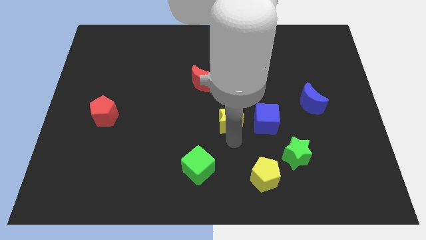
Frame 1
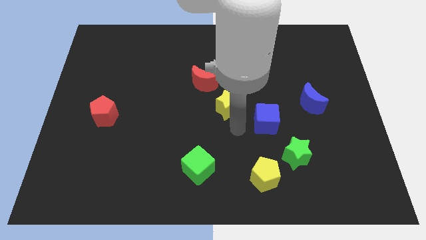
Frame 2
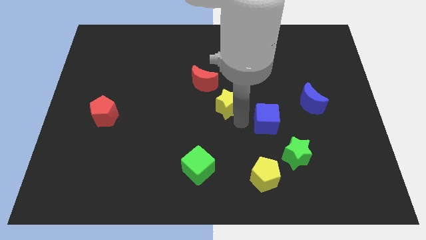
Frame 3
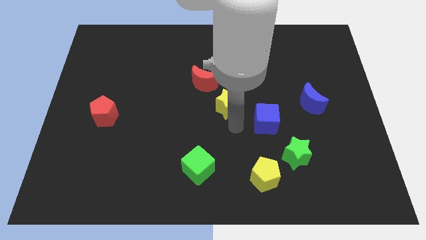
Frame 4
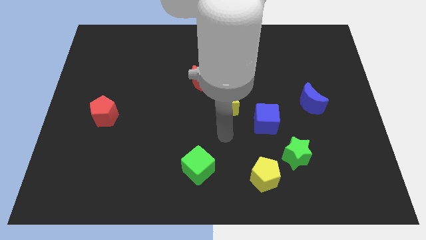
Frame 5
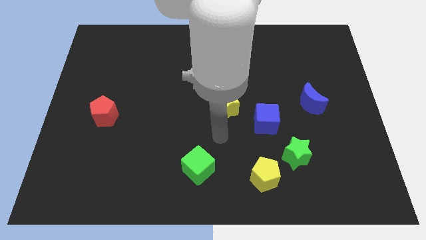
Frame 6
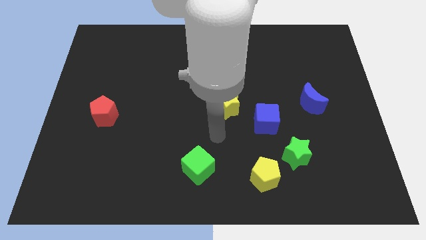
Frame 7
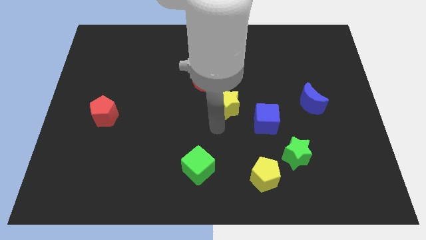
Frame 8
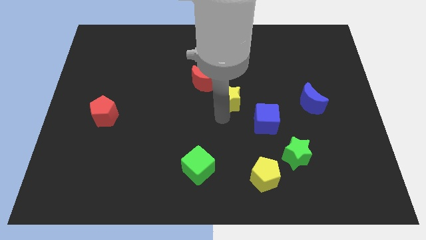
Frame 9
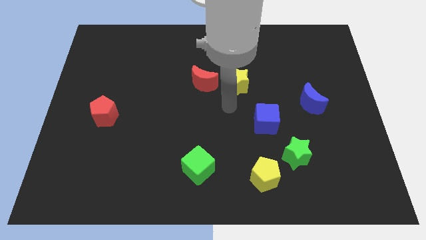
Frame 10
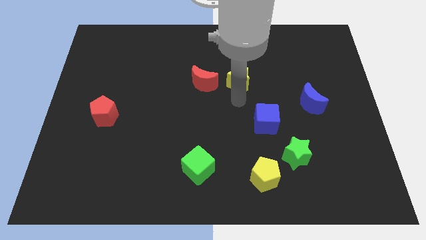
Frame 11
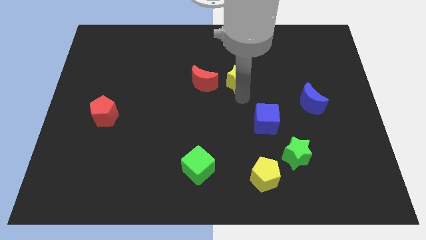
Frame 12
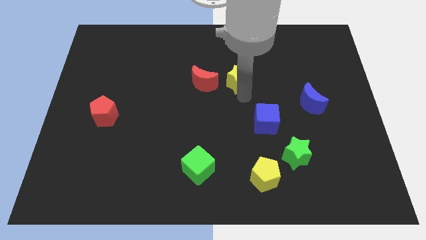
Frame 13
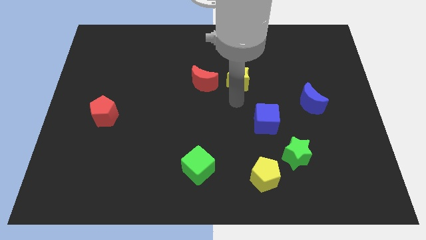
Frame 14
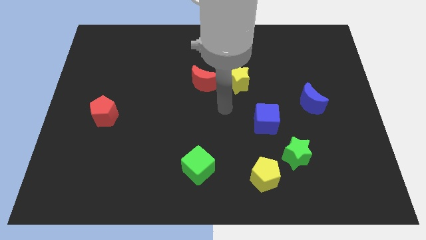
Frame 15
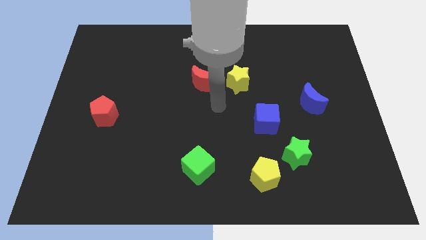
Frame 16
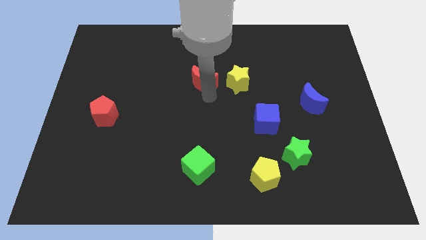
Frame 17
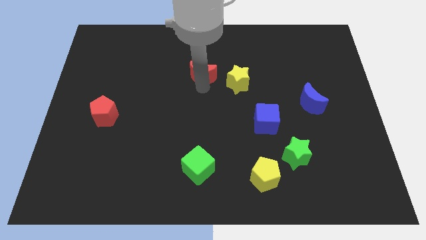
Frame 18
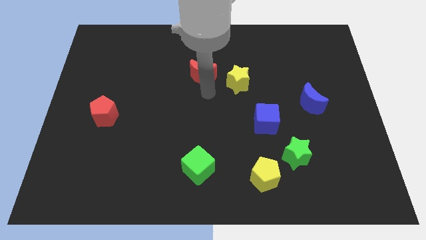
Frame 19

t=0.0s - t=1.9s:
move the yellow star right of the red moon

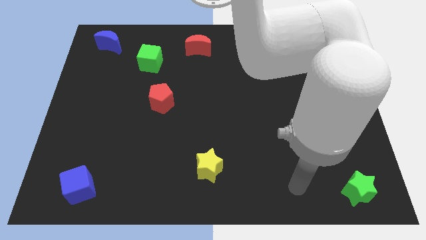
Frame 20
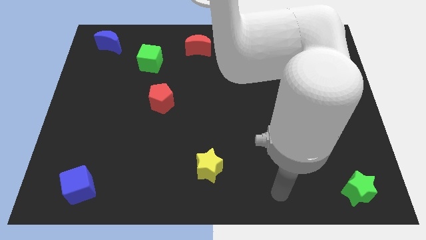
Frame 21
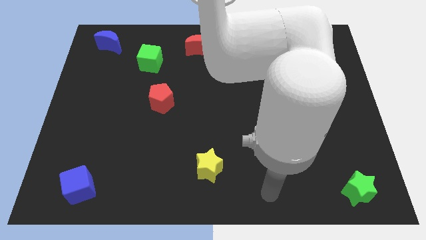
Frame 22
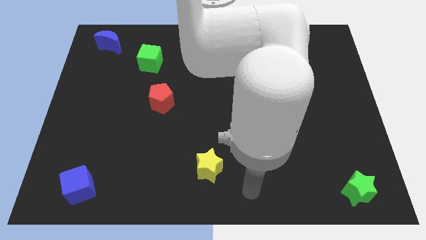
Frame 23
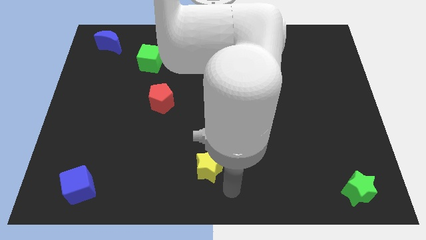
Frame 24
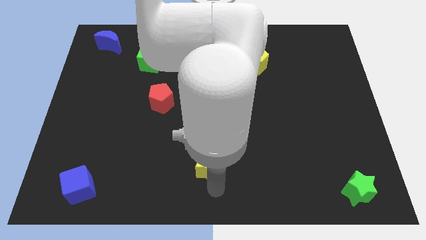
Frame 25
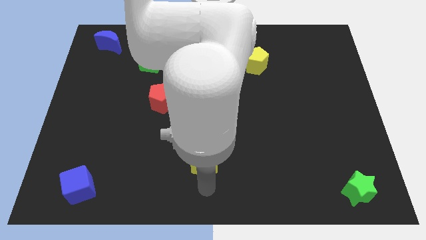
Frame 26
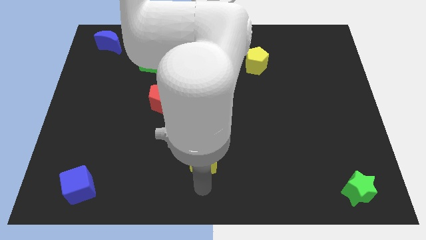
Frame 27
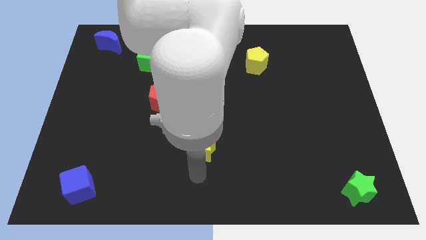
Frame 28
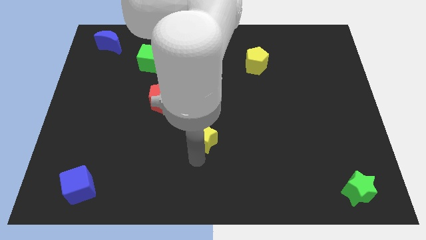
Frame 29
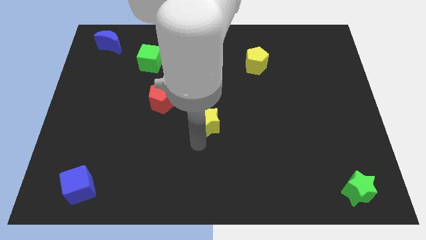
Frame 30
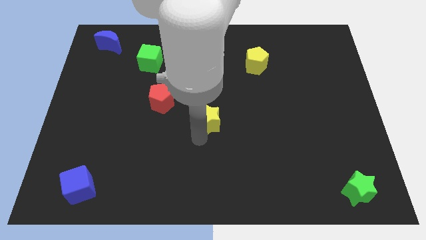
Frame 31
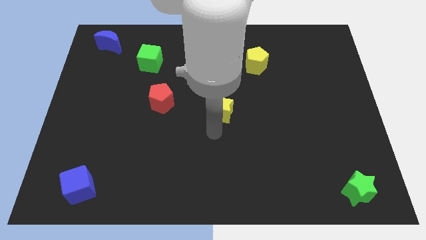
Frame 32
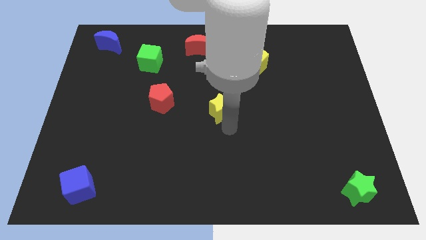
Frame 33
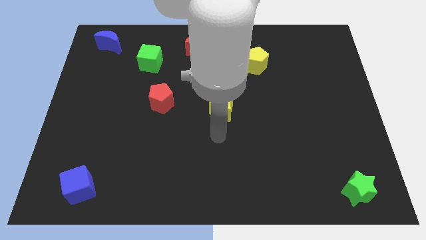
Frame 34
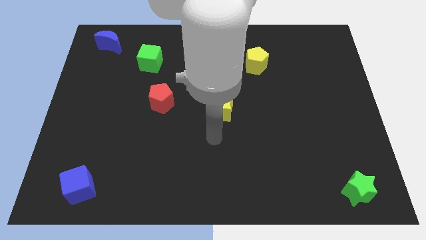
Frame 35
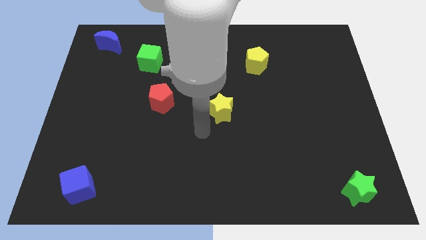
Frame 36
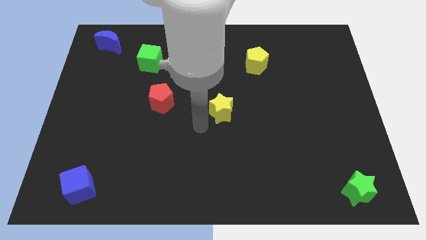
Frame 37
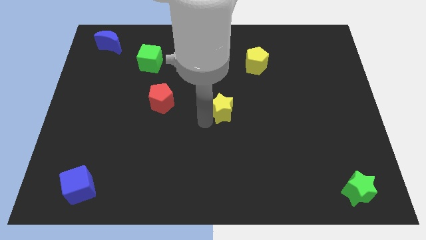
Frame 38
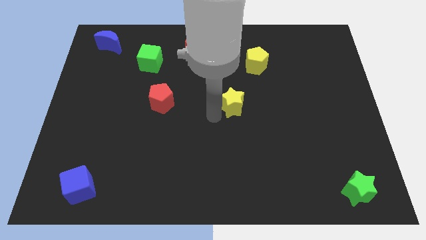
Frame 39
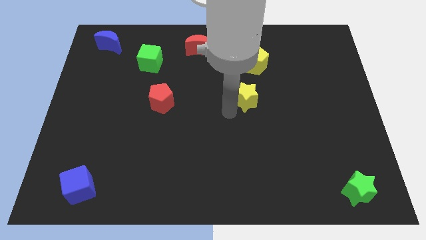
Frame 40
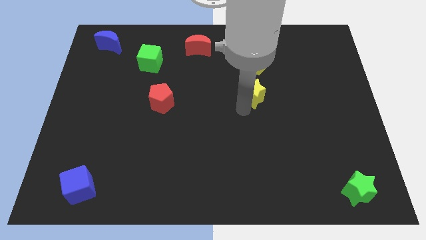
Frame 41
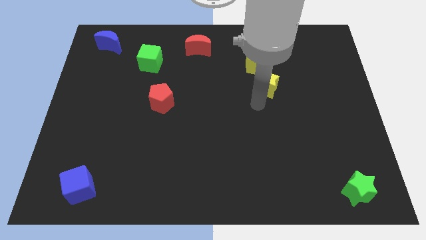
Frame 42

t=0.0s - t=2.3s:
put the yellow star below the yellow pentagon

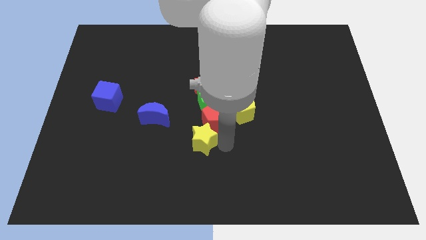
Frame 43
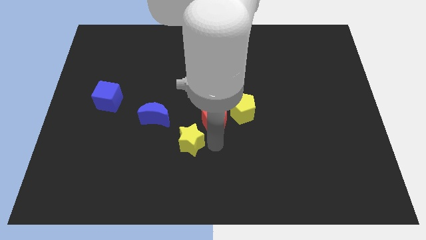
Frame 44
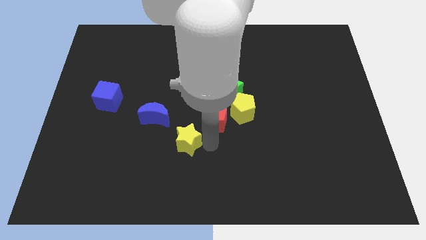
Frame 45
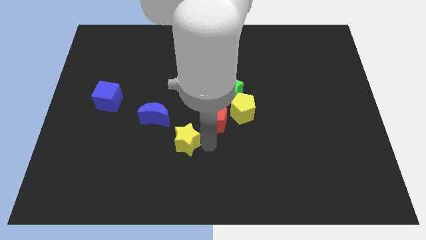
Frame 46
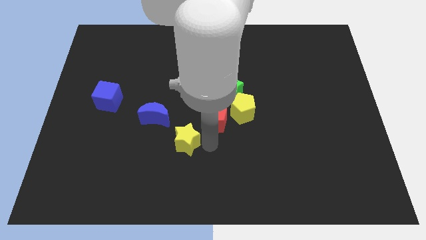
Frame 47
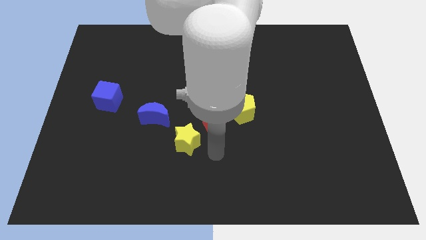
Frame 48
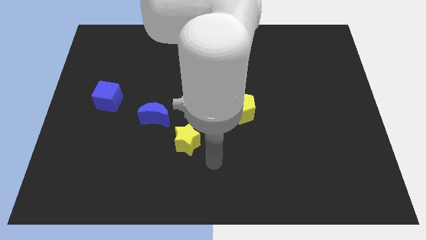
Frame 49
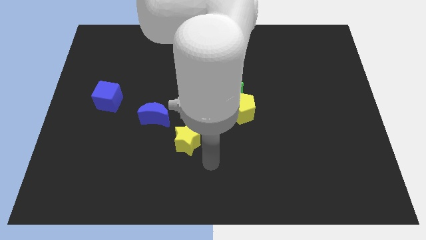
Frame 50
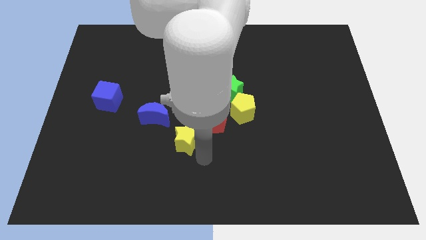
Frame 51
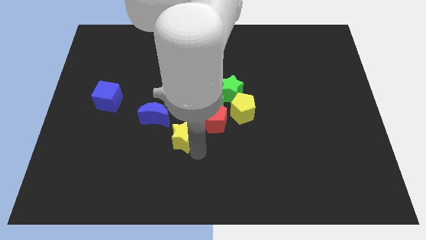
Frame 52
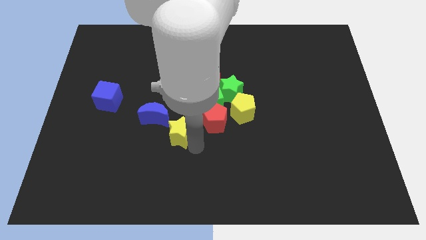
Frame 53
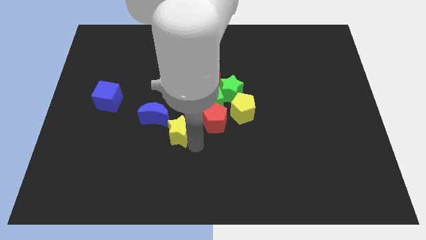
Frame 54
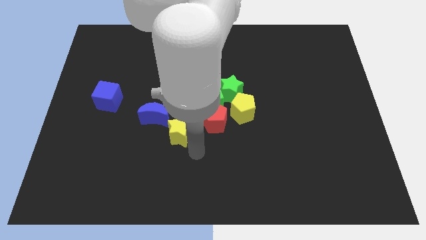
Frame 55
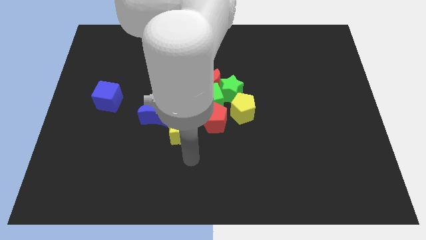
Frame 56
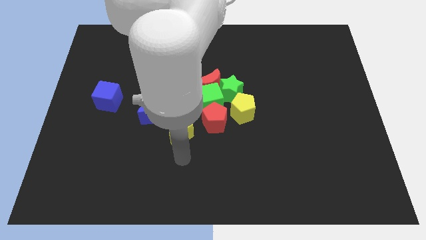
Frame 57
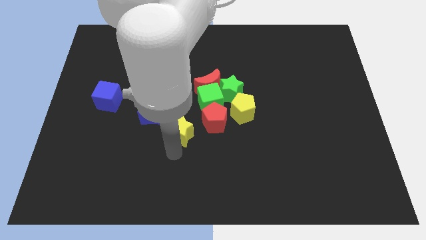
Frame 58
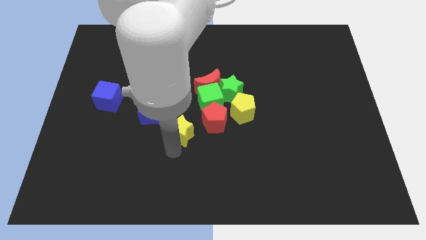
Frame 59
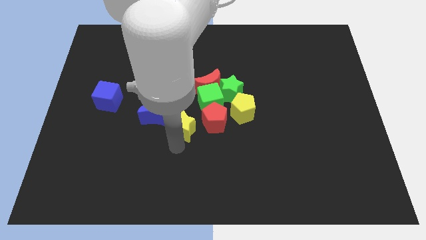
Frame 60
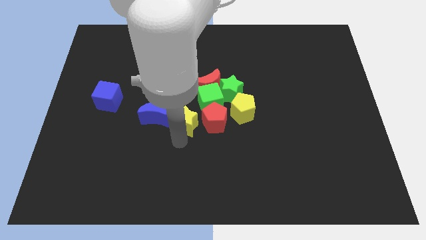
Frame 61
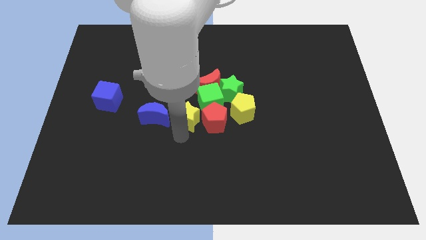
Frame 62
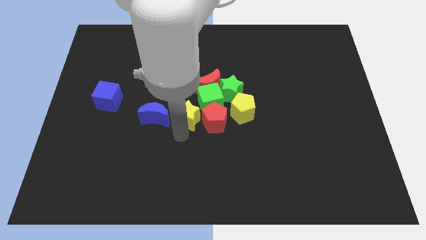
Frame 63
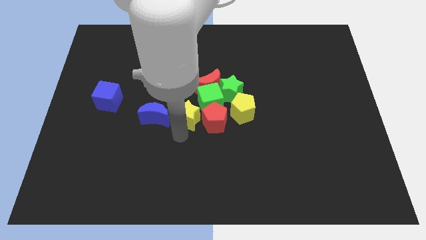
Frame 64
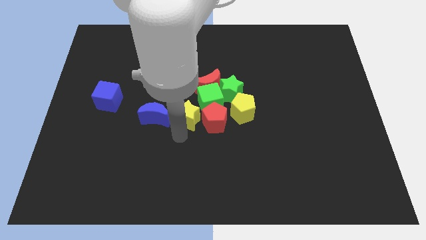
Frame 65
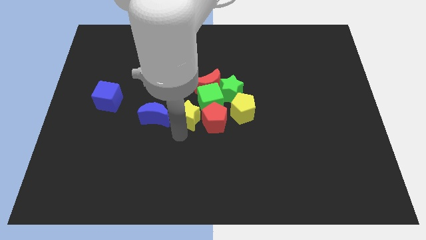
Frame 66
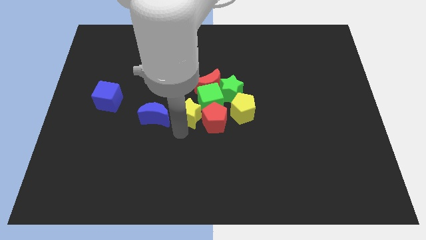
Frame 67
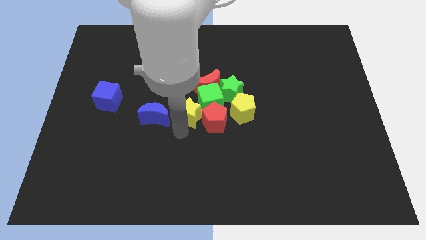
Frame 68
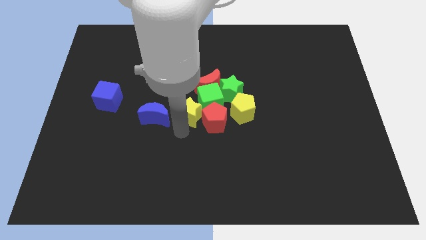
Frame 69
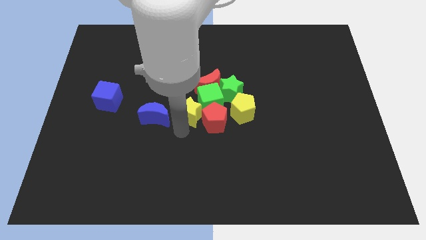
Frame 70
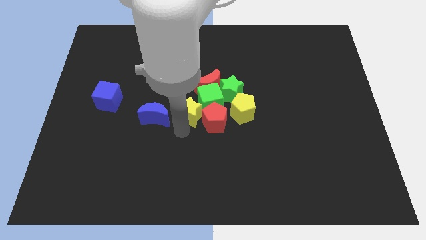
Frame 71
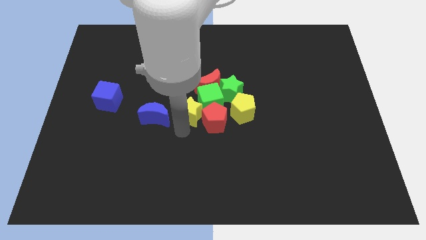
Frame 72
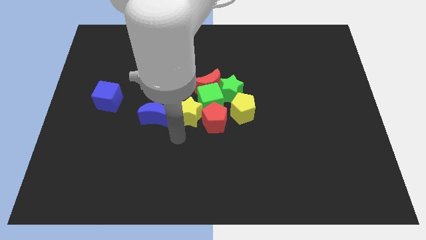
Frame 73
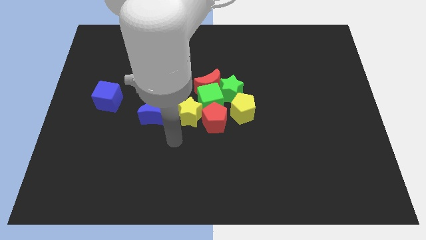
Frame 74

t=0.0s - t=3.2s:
move yellow star in between the red pentagon and the blue moon

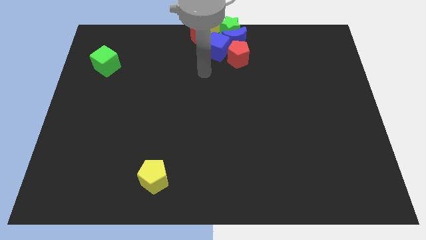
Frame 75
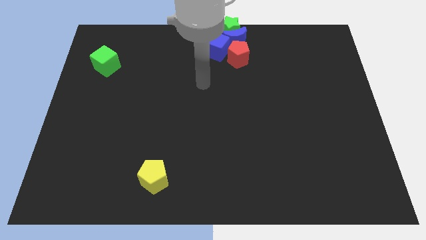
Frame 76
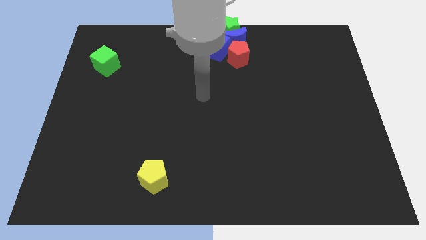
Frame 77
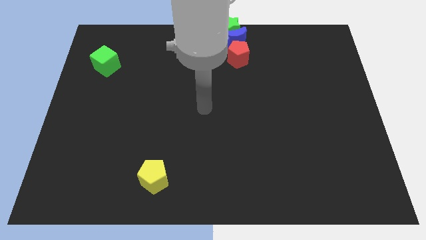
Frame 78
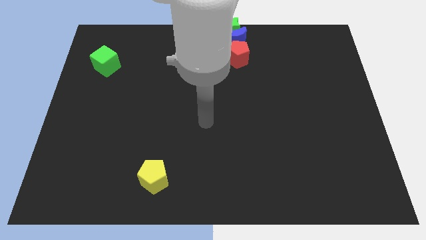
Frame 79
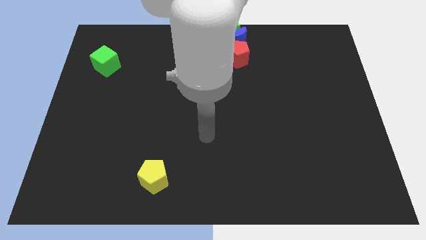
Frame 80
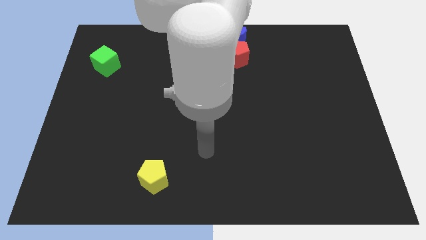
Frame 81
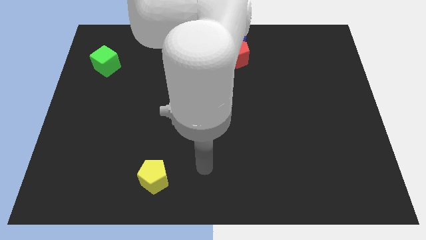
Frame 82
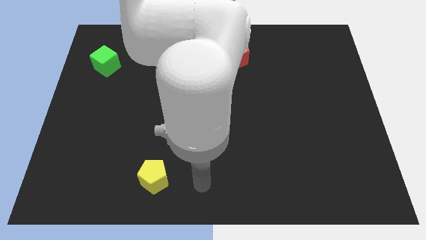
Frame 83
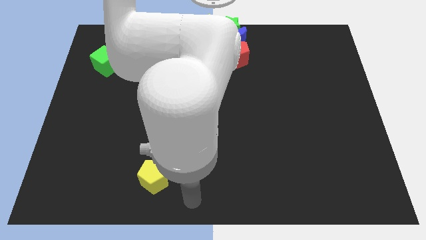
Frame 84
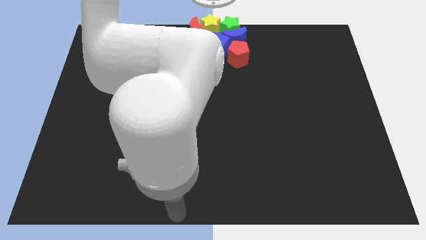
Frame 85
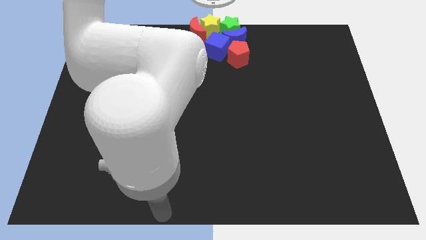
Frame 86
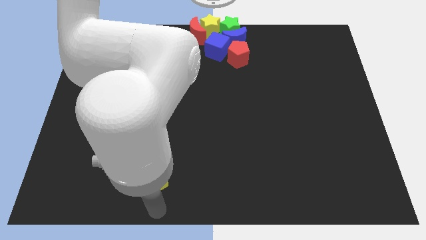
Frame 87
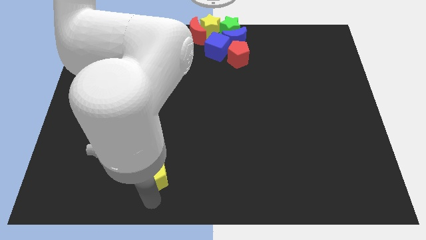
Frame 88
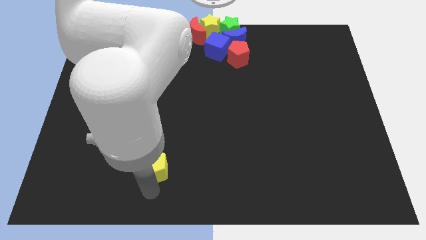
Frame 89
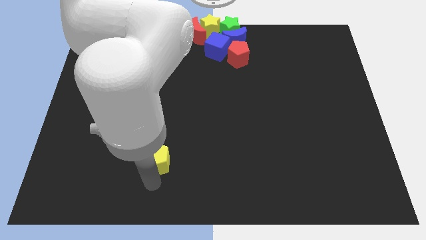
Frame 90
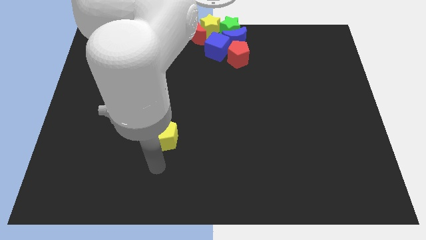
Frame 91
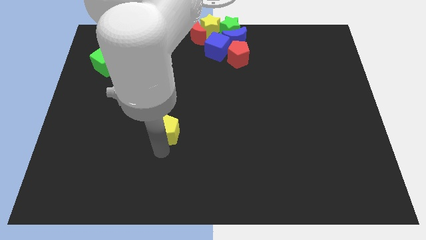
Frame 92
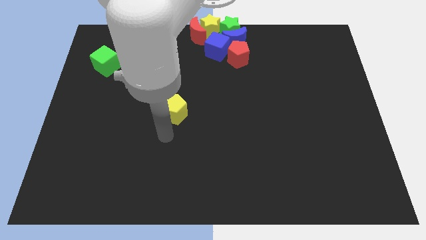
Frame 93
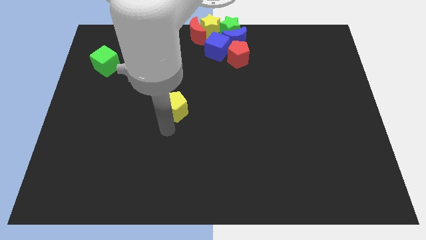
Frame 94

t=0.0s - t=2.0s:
drag the yellow pentagon diagonally on the bottom right side of the green cube
